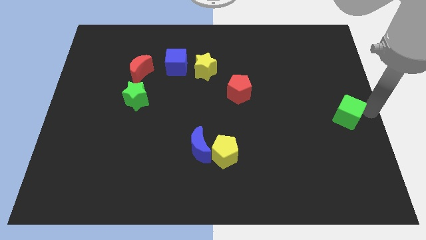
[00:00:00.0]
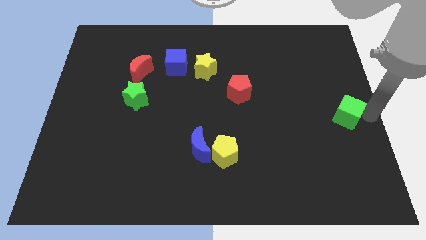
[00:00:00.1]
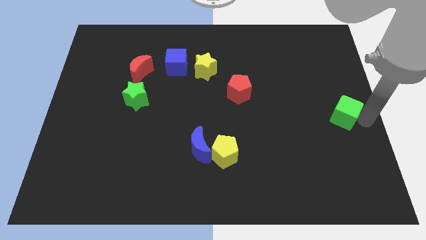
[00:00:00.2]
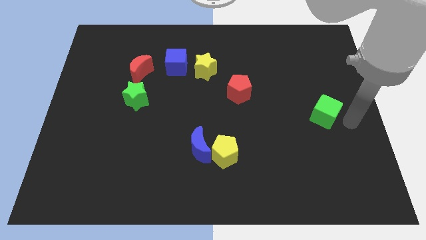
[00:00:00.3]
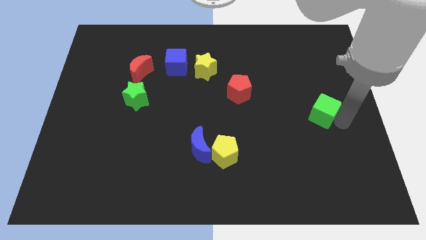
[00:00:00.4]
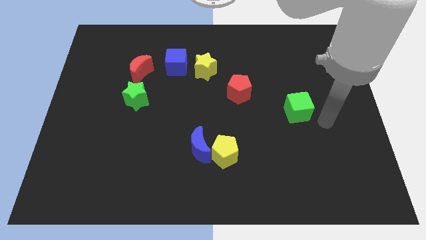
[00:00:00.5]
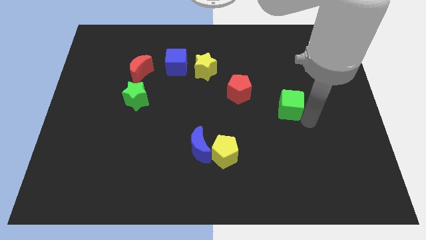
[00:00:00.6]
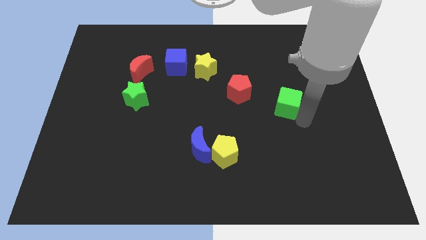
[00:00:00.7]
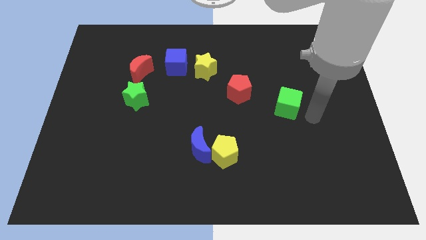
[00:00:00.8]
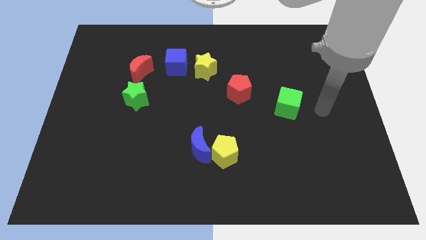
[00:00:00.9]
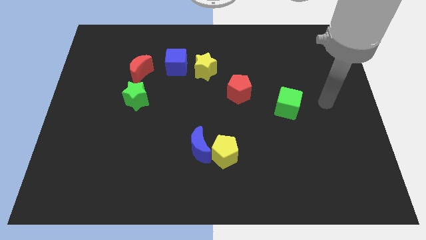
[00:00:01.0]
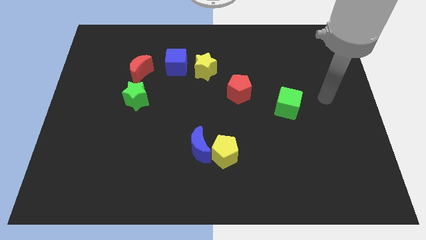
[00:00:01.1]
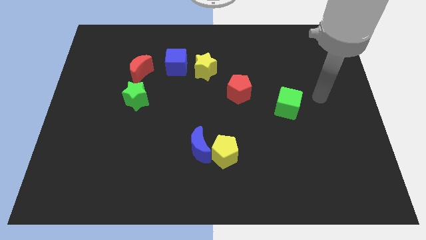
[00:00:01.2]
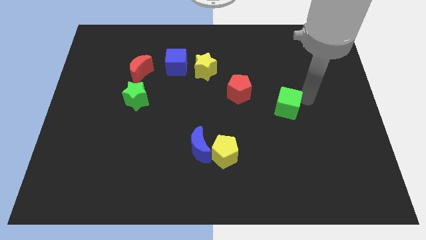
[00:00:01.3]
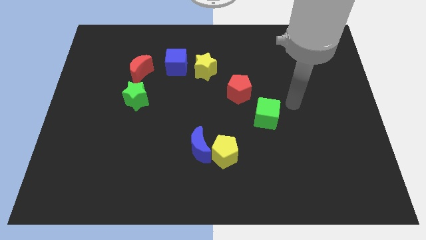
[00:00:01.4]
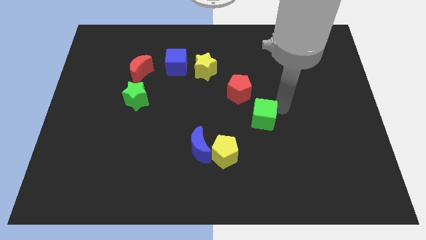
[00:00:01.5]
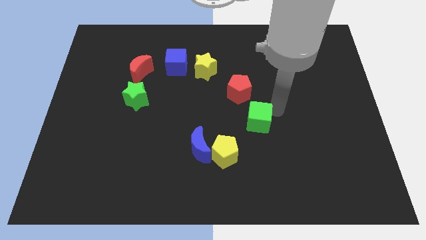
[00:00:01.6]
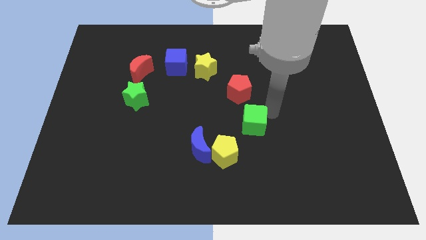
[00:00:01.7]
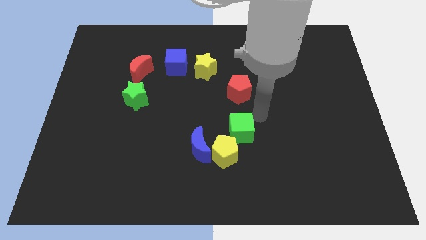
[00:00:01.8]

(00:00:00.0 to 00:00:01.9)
move the green cube right above the yellow pentagon

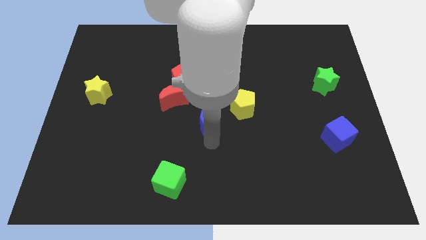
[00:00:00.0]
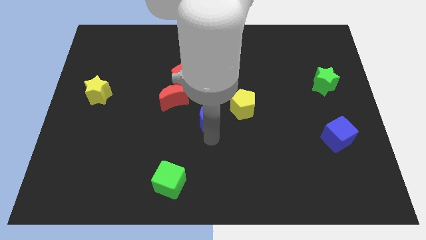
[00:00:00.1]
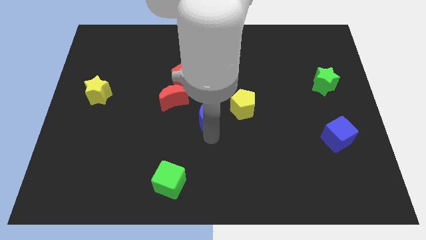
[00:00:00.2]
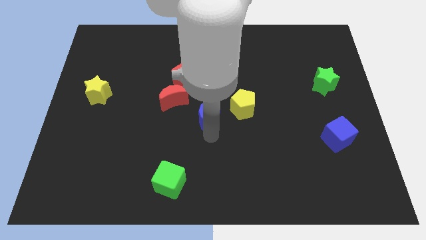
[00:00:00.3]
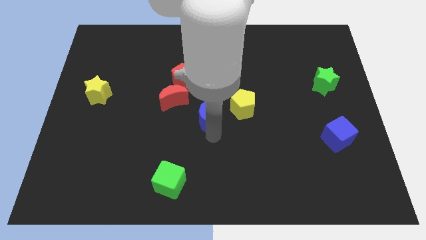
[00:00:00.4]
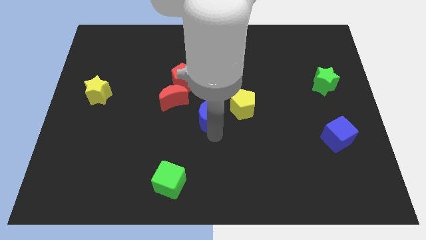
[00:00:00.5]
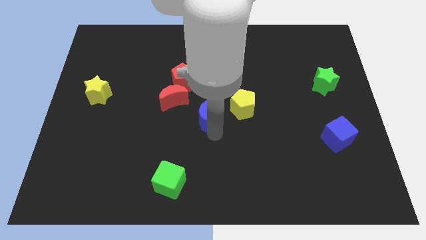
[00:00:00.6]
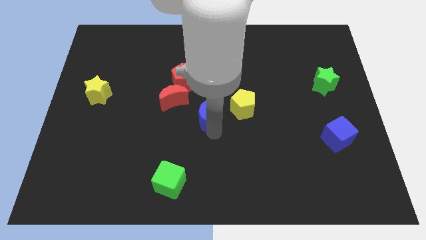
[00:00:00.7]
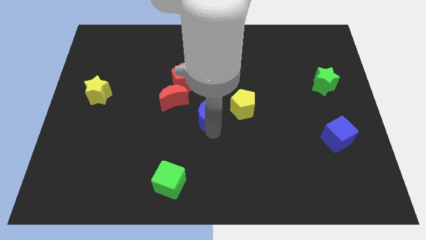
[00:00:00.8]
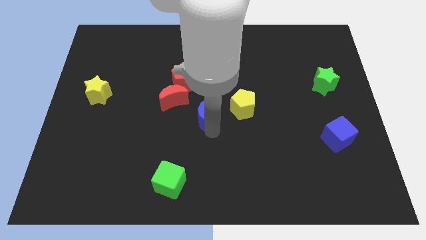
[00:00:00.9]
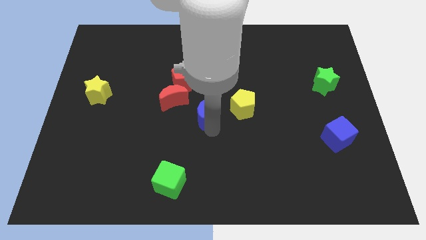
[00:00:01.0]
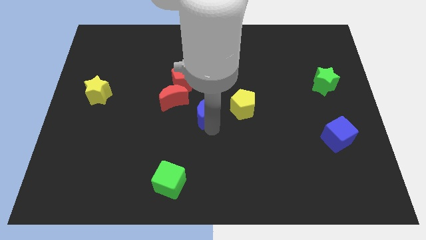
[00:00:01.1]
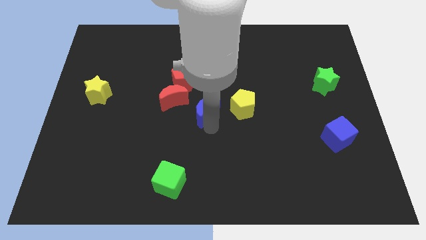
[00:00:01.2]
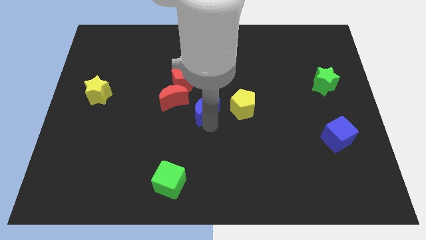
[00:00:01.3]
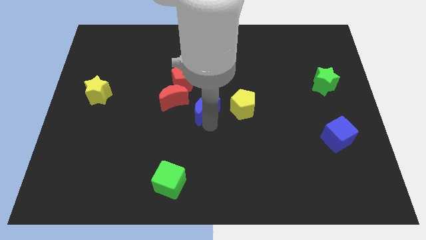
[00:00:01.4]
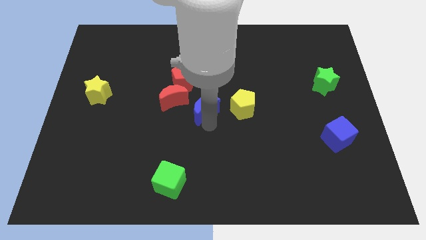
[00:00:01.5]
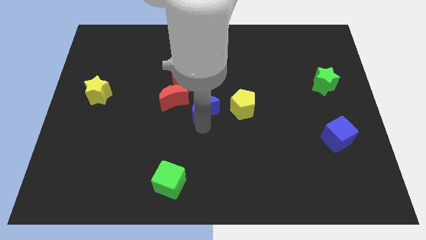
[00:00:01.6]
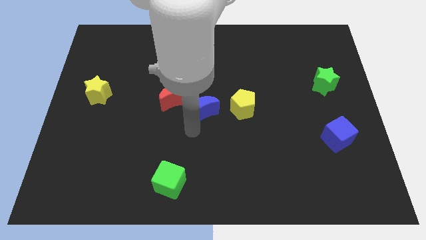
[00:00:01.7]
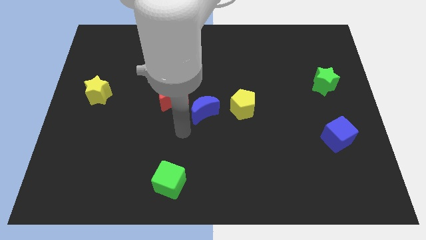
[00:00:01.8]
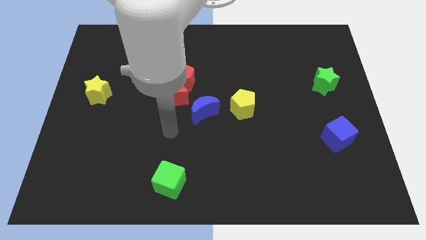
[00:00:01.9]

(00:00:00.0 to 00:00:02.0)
push the blue crescent towards the center of the board

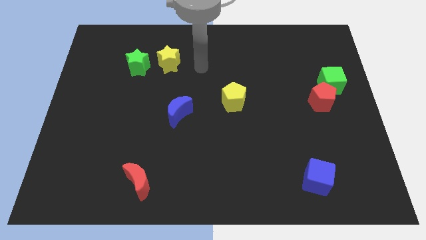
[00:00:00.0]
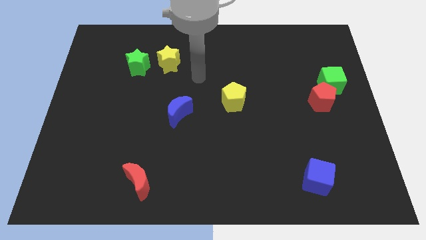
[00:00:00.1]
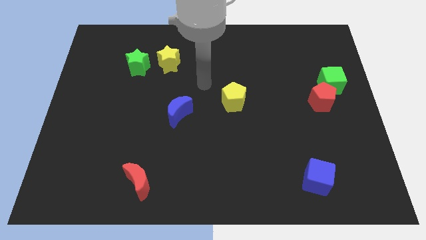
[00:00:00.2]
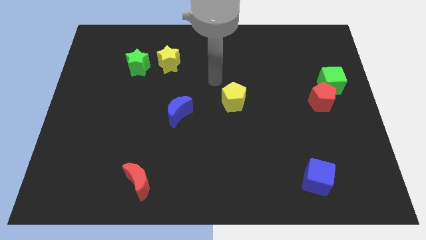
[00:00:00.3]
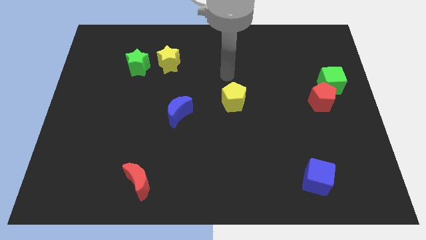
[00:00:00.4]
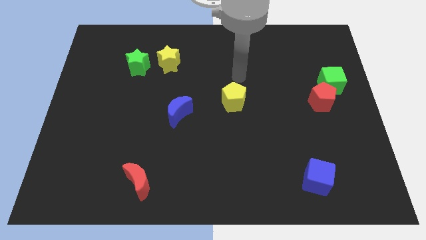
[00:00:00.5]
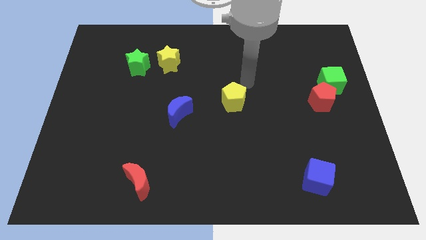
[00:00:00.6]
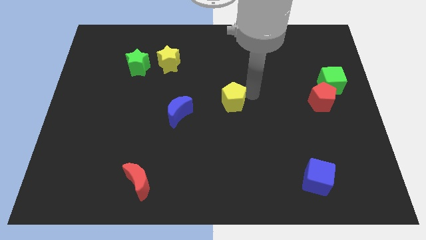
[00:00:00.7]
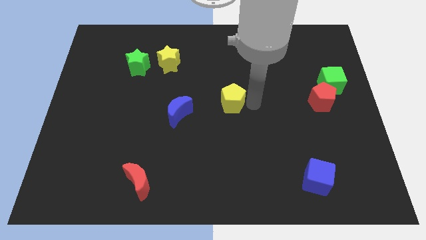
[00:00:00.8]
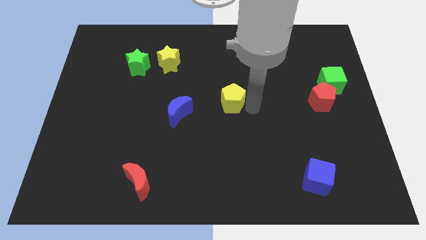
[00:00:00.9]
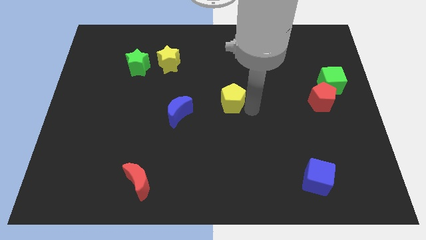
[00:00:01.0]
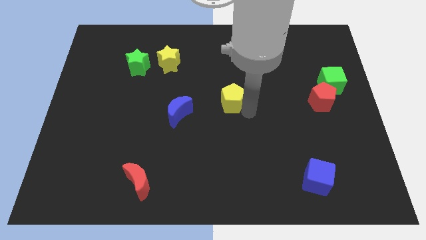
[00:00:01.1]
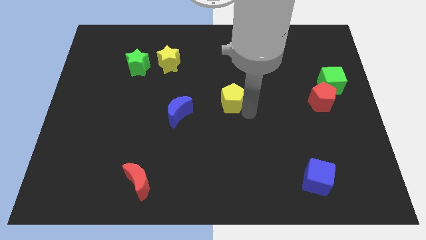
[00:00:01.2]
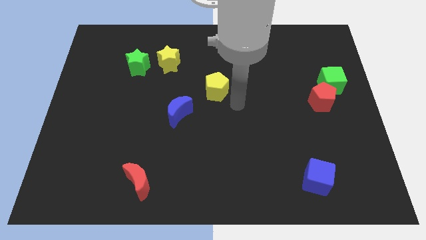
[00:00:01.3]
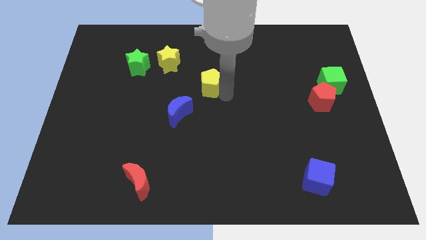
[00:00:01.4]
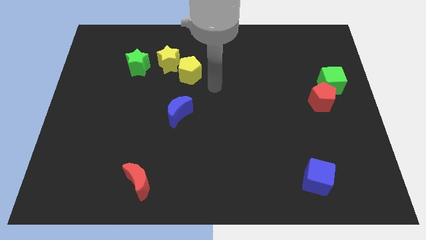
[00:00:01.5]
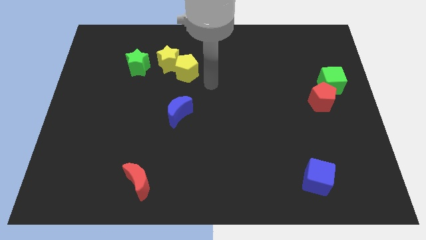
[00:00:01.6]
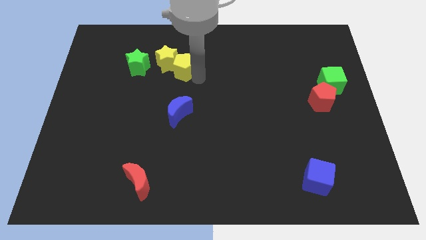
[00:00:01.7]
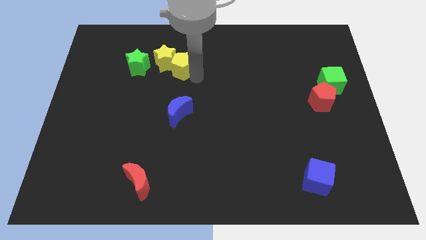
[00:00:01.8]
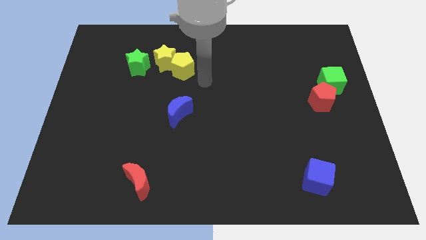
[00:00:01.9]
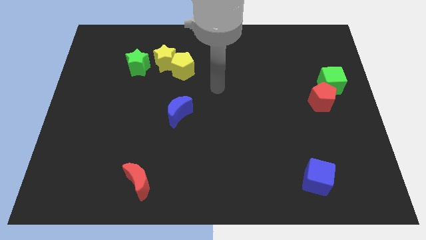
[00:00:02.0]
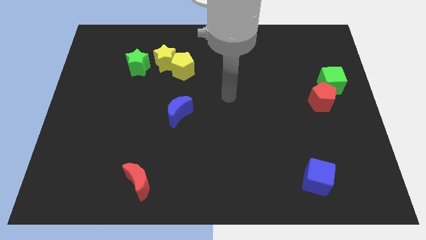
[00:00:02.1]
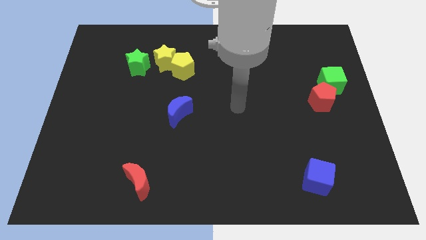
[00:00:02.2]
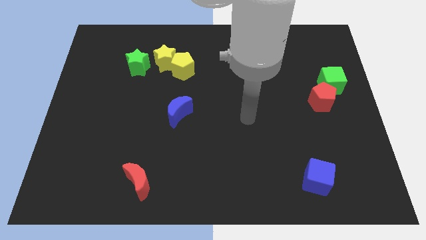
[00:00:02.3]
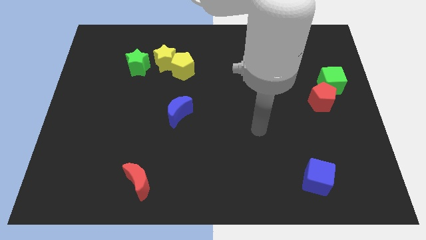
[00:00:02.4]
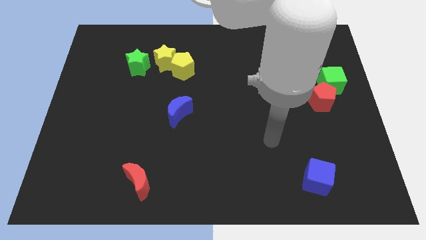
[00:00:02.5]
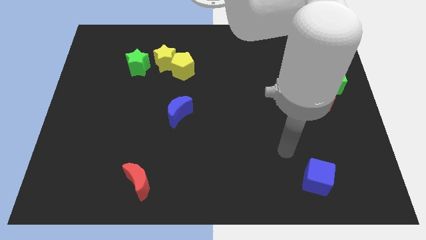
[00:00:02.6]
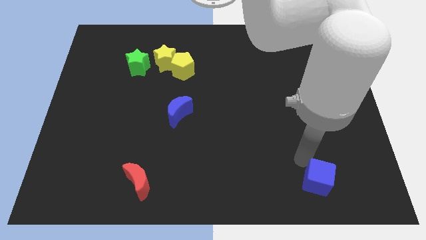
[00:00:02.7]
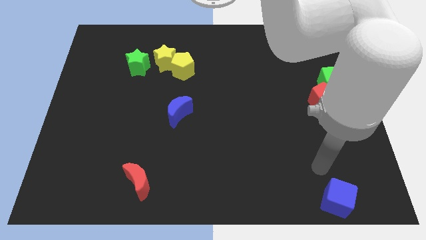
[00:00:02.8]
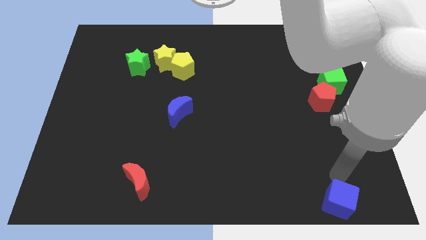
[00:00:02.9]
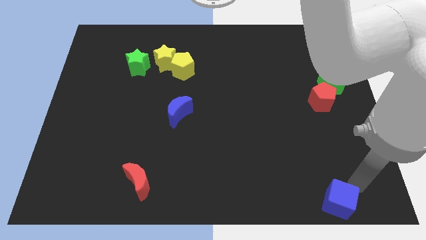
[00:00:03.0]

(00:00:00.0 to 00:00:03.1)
move the yellow pentagon into the yellow star

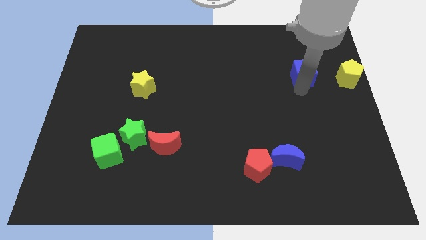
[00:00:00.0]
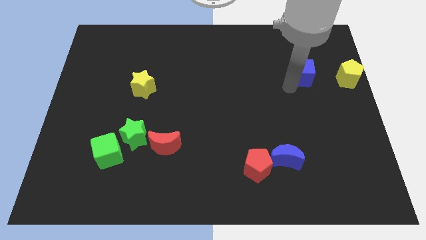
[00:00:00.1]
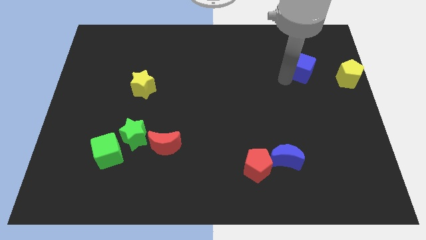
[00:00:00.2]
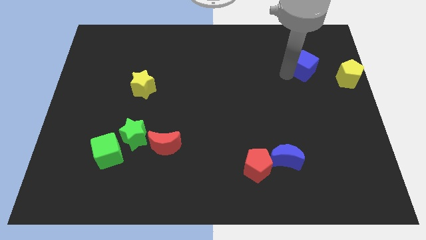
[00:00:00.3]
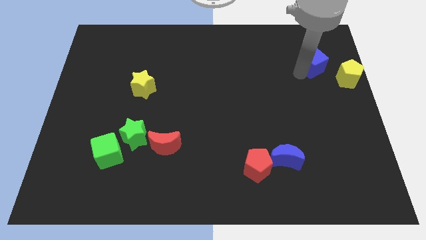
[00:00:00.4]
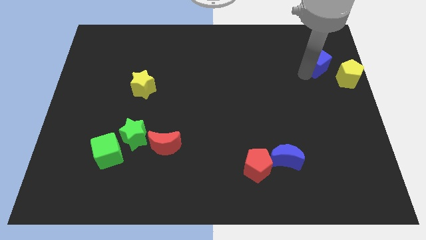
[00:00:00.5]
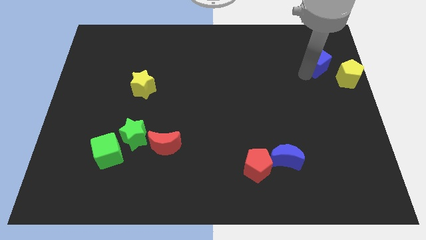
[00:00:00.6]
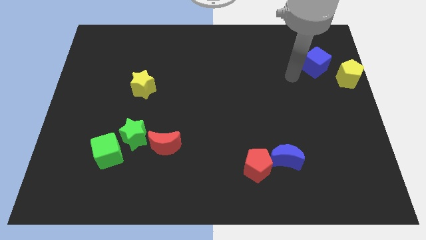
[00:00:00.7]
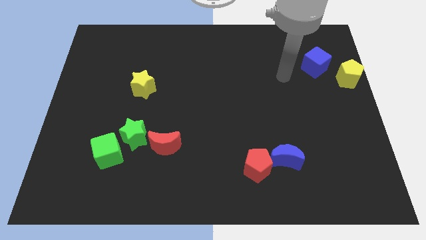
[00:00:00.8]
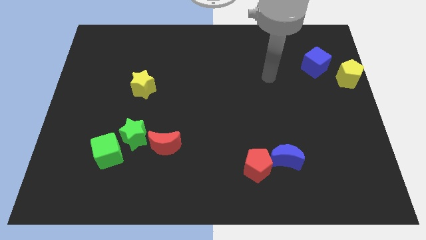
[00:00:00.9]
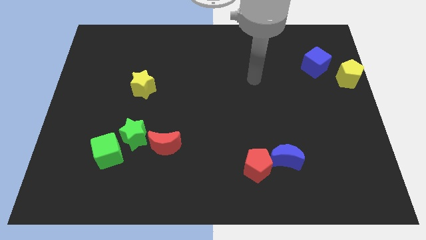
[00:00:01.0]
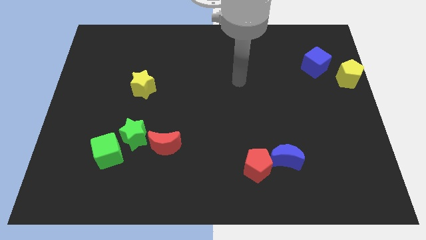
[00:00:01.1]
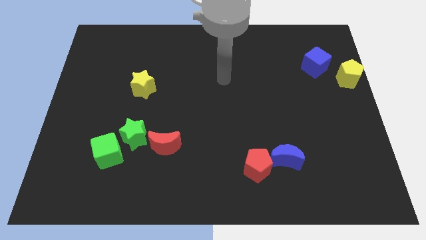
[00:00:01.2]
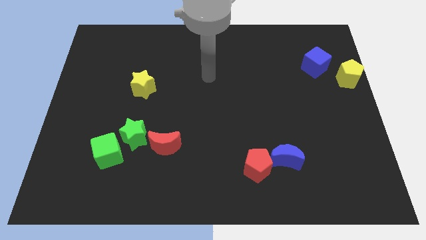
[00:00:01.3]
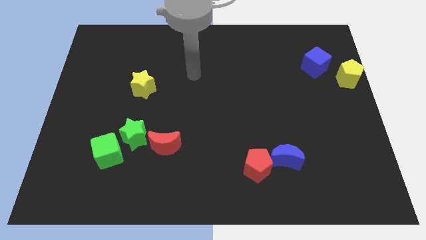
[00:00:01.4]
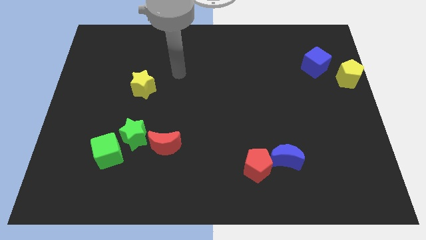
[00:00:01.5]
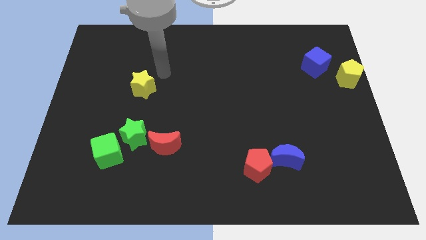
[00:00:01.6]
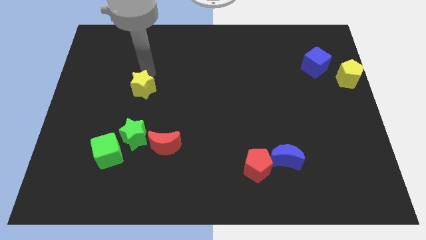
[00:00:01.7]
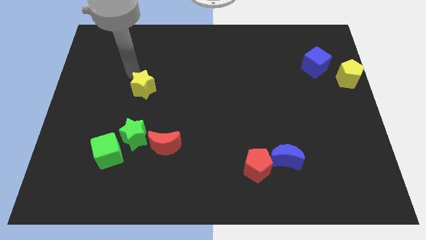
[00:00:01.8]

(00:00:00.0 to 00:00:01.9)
drag the pointer to the top of the yellow star
